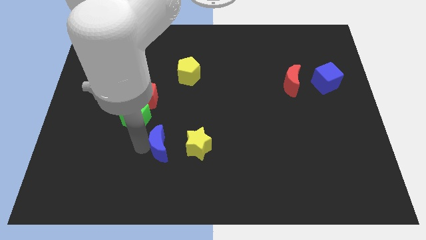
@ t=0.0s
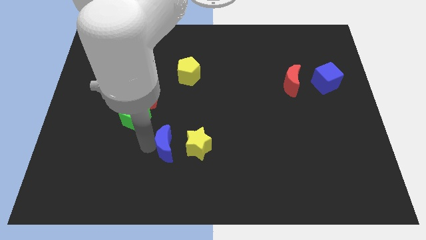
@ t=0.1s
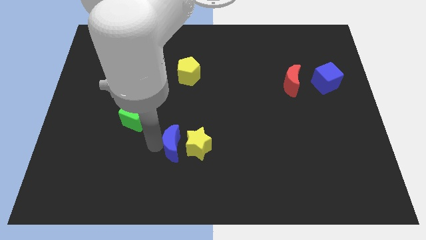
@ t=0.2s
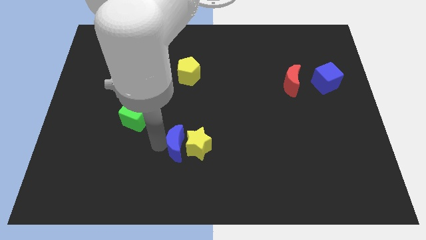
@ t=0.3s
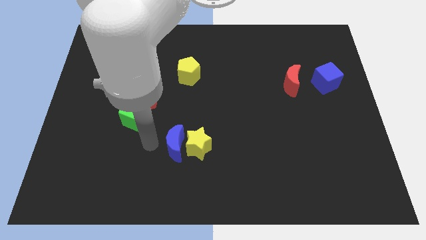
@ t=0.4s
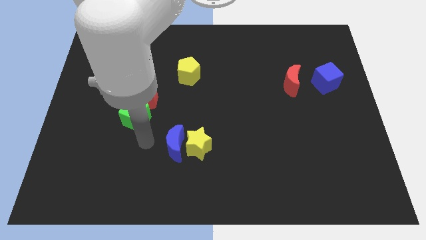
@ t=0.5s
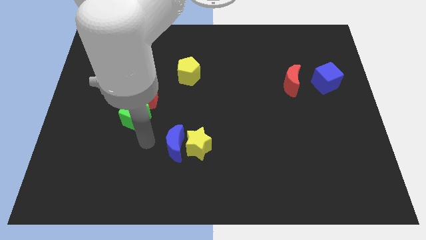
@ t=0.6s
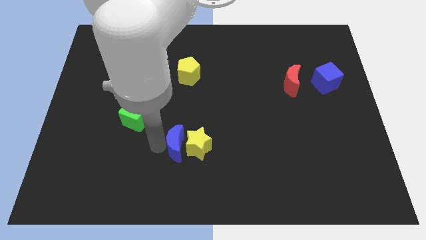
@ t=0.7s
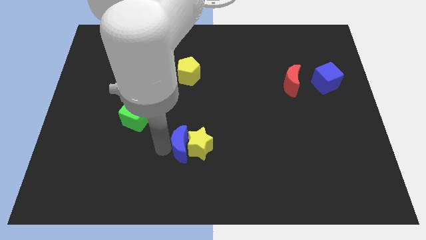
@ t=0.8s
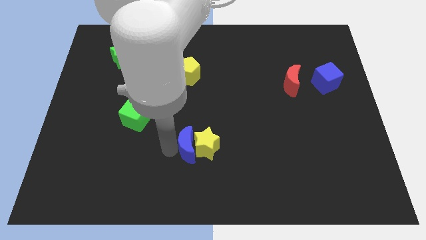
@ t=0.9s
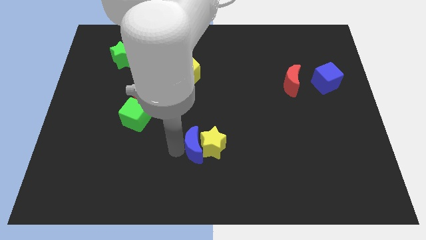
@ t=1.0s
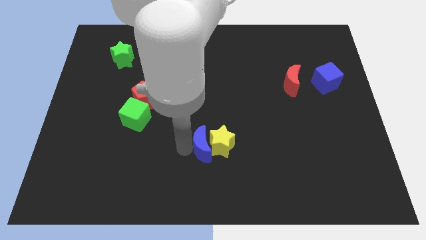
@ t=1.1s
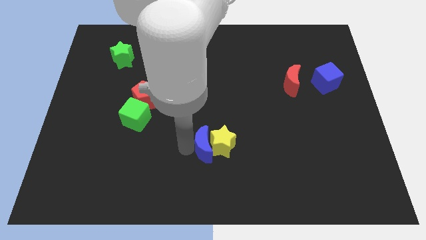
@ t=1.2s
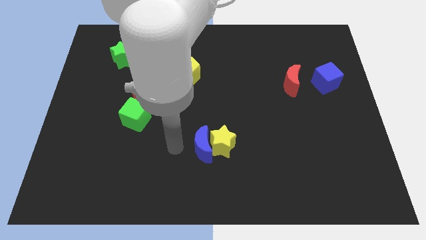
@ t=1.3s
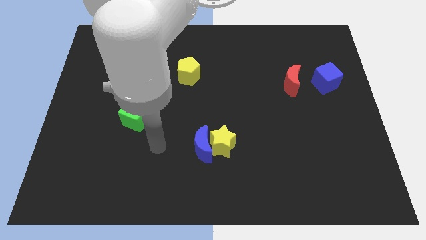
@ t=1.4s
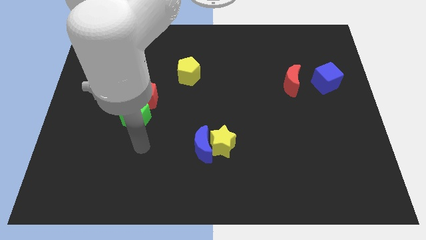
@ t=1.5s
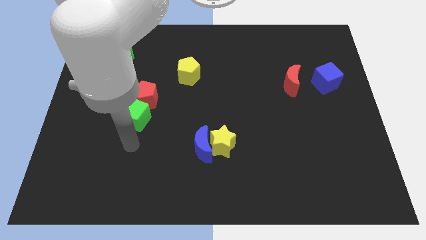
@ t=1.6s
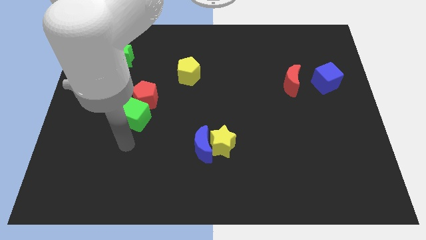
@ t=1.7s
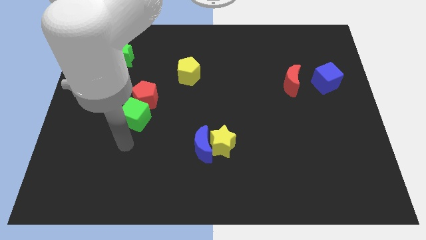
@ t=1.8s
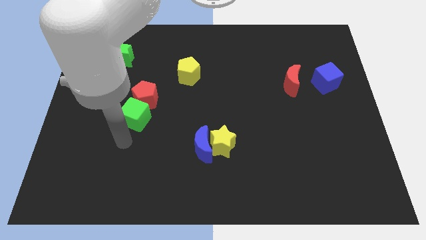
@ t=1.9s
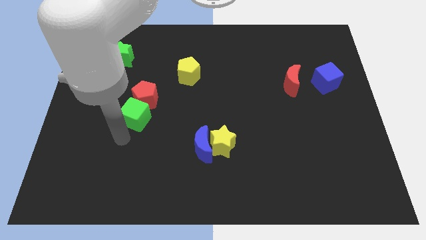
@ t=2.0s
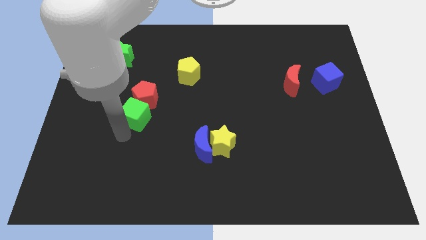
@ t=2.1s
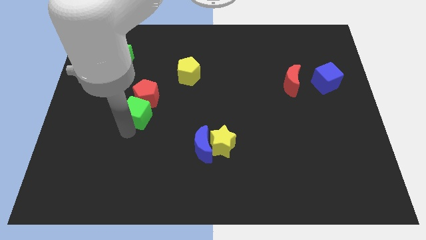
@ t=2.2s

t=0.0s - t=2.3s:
move the yellow star with blue moon slightly to the right

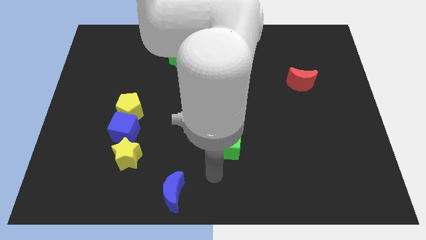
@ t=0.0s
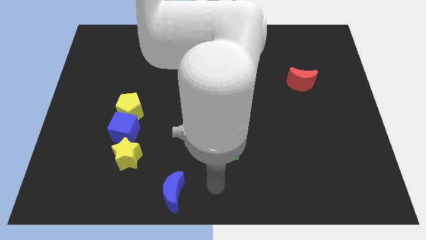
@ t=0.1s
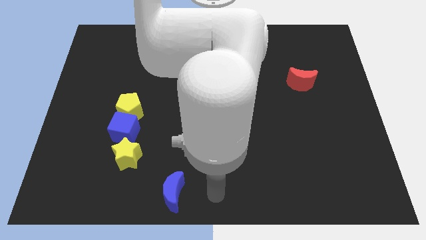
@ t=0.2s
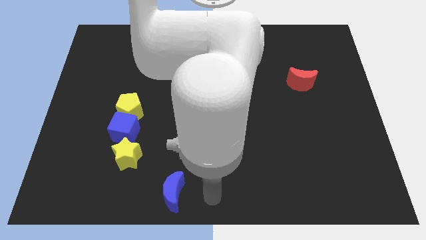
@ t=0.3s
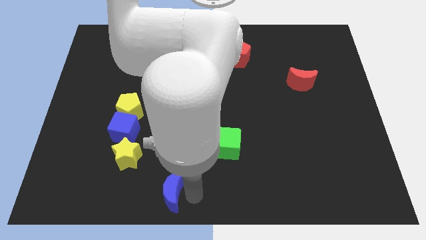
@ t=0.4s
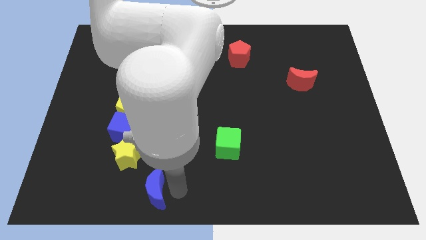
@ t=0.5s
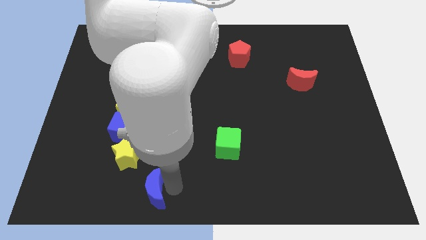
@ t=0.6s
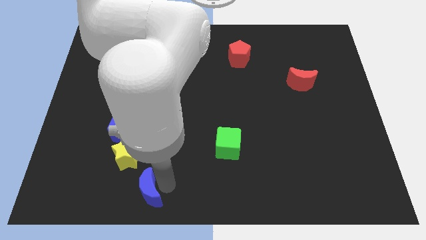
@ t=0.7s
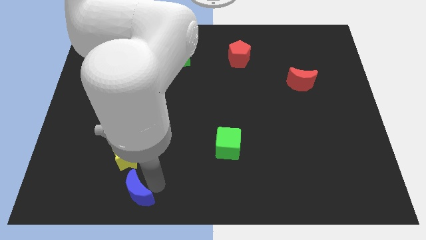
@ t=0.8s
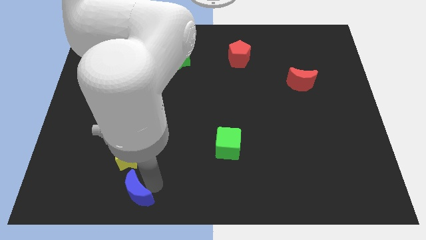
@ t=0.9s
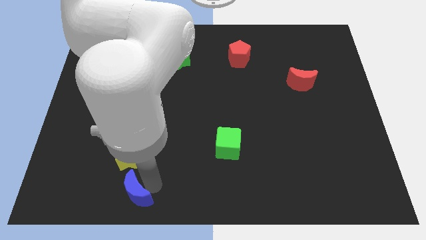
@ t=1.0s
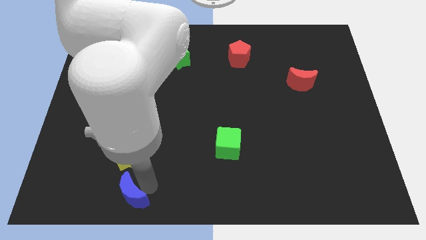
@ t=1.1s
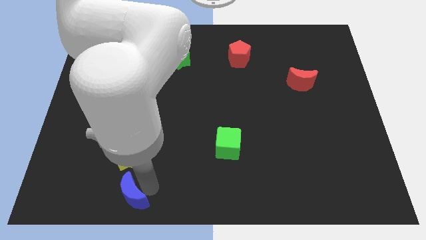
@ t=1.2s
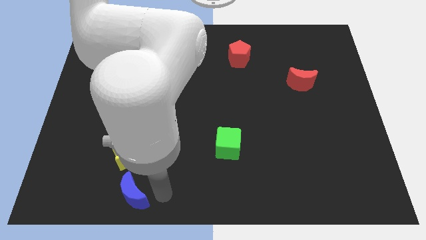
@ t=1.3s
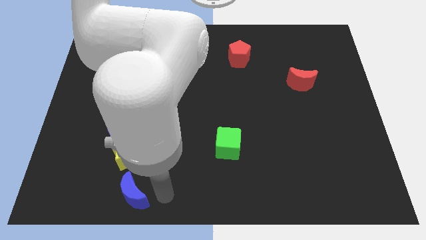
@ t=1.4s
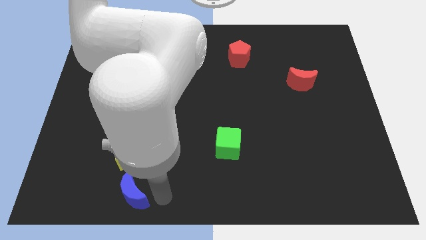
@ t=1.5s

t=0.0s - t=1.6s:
place the blue moon below the yellow star

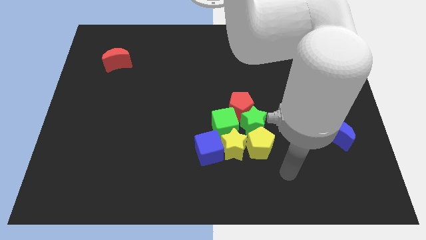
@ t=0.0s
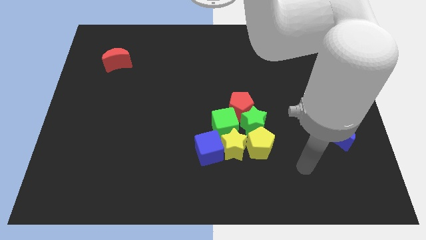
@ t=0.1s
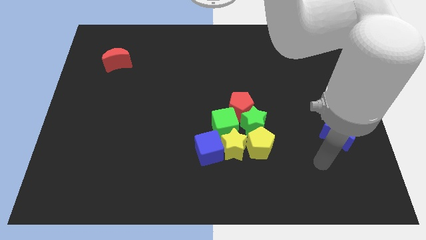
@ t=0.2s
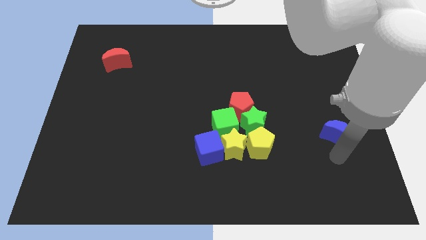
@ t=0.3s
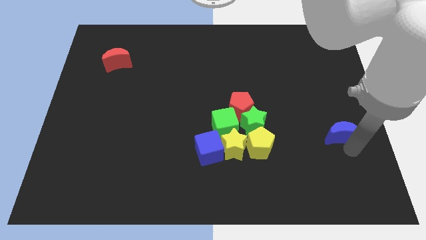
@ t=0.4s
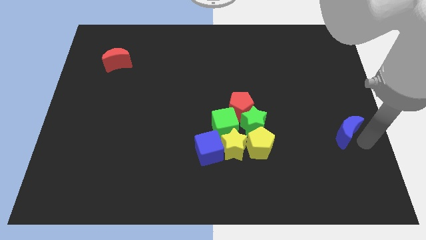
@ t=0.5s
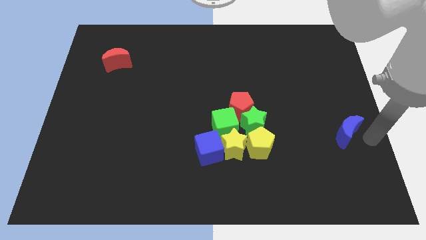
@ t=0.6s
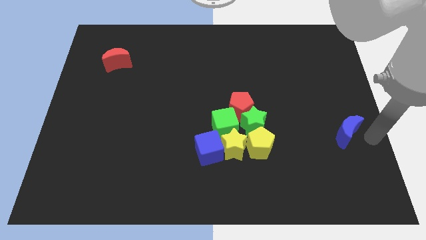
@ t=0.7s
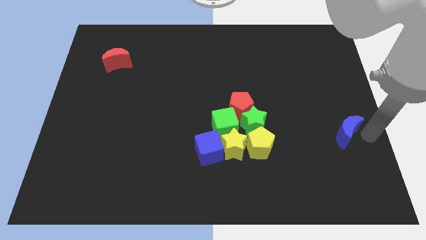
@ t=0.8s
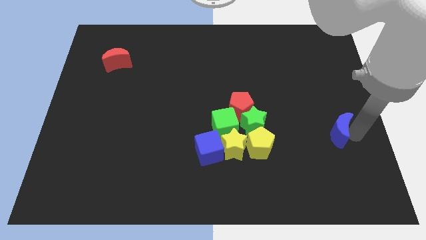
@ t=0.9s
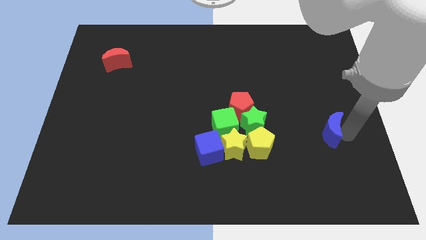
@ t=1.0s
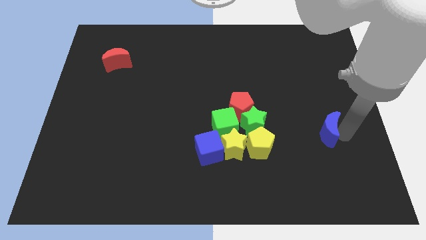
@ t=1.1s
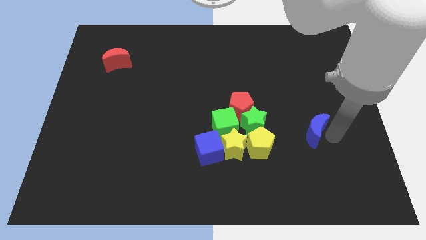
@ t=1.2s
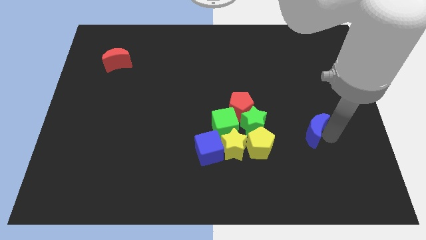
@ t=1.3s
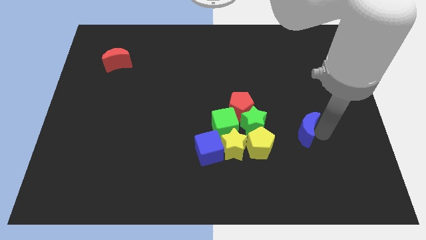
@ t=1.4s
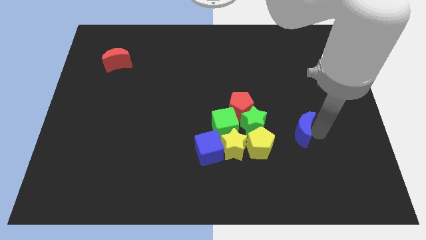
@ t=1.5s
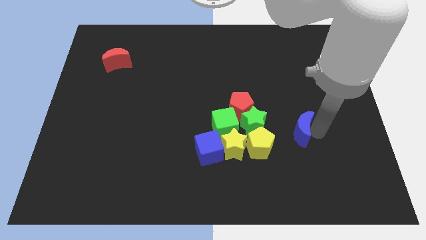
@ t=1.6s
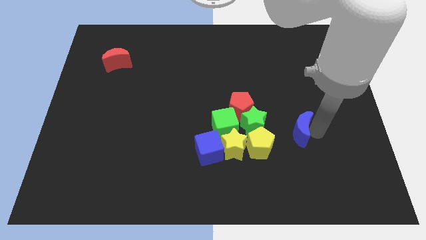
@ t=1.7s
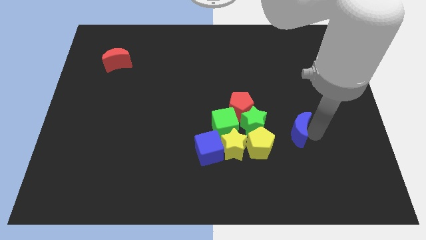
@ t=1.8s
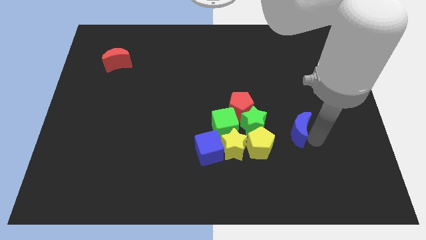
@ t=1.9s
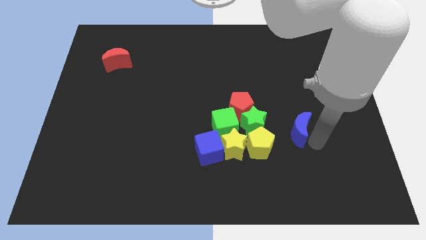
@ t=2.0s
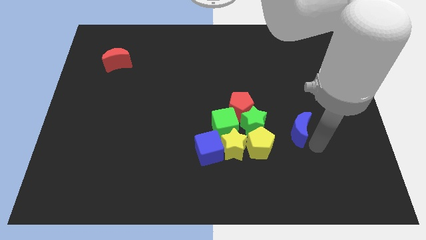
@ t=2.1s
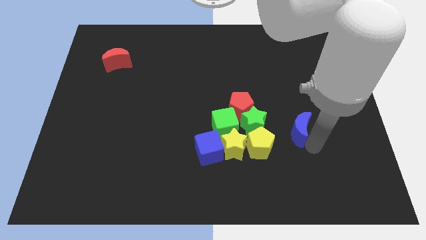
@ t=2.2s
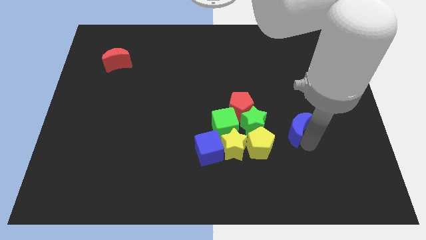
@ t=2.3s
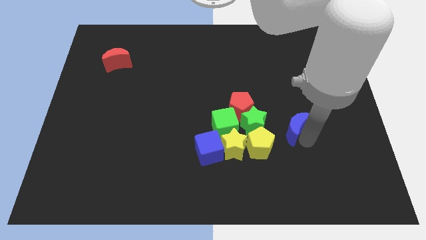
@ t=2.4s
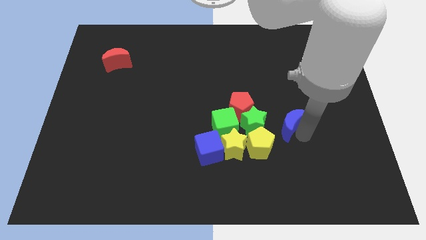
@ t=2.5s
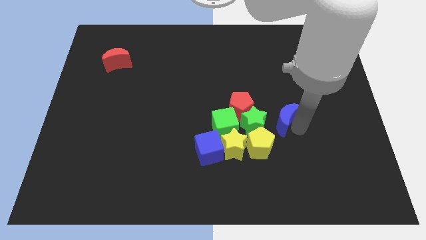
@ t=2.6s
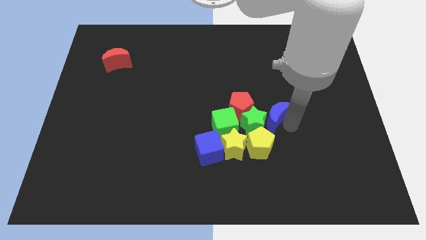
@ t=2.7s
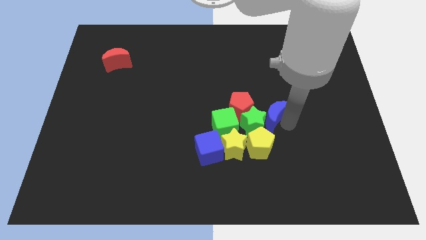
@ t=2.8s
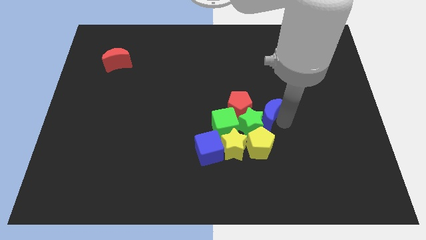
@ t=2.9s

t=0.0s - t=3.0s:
place the blue moon right to the green star

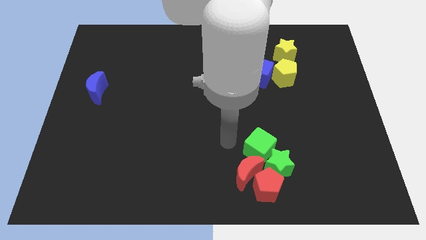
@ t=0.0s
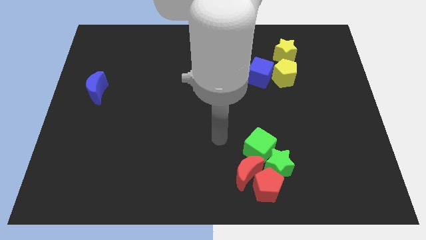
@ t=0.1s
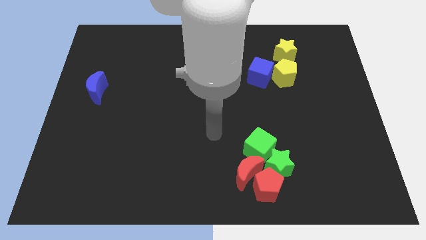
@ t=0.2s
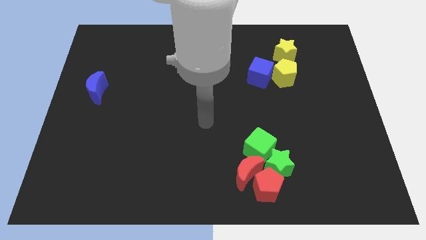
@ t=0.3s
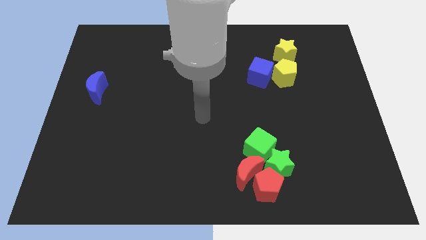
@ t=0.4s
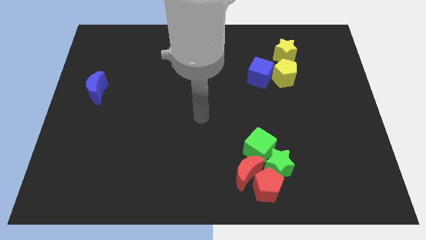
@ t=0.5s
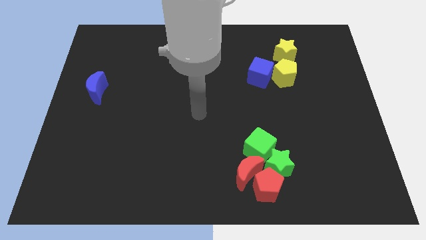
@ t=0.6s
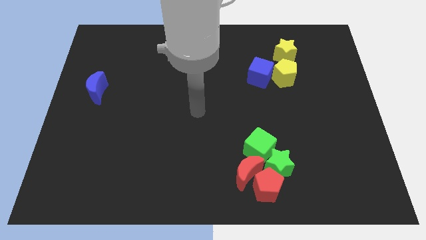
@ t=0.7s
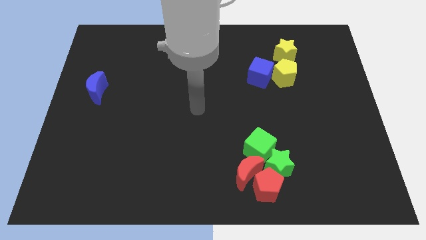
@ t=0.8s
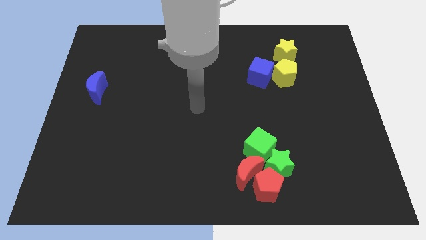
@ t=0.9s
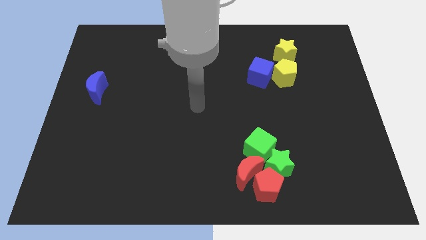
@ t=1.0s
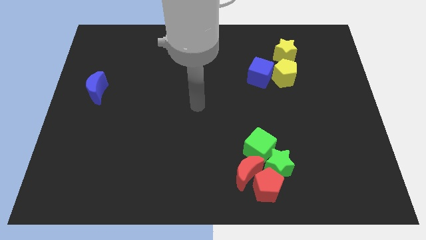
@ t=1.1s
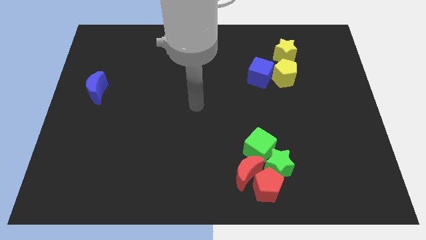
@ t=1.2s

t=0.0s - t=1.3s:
point your arm at the center of the board

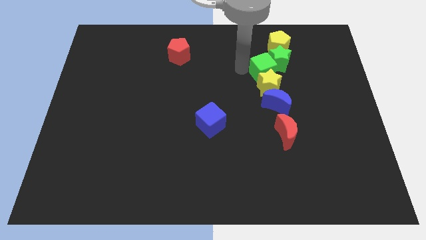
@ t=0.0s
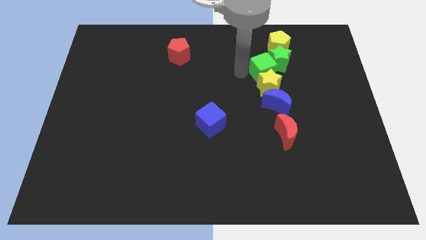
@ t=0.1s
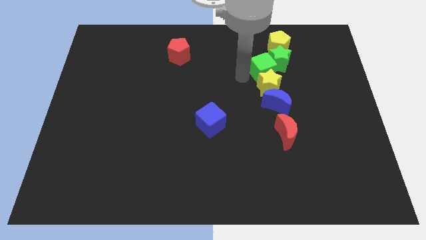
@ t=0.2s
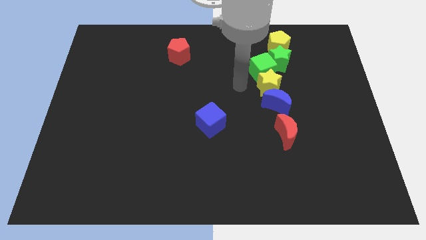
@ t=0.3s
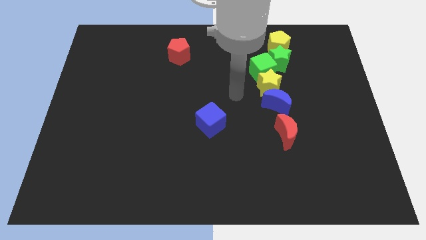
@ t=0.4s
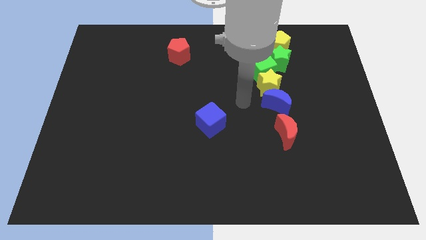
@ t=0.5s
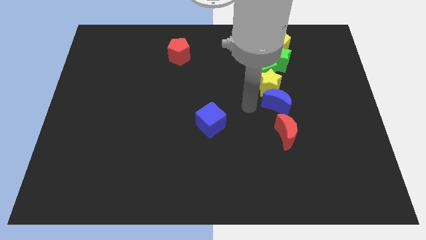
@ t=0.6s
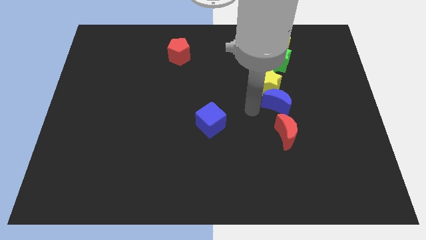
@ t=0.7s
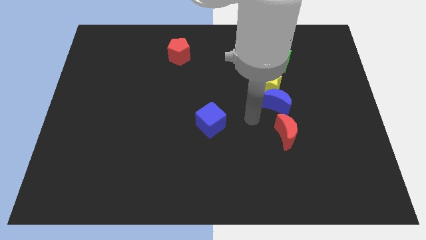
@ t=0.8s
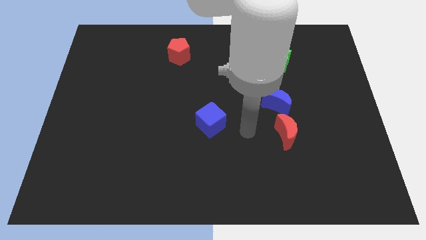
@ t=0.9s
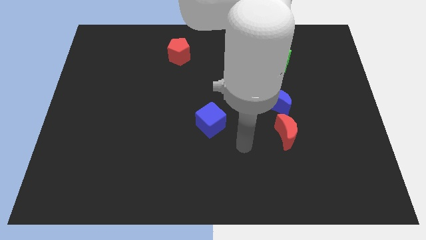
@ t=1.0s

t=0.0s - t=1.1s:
move your hand away from green cube
